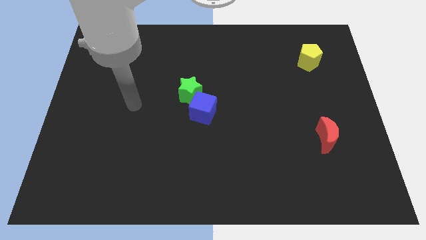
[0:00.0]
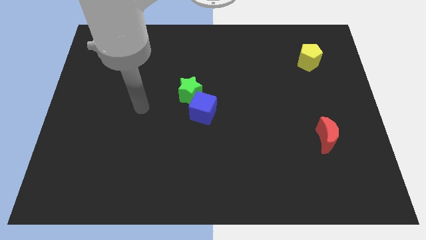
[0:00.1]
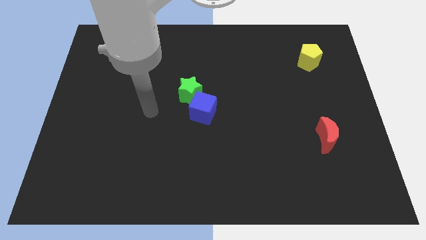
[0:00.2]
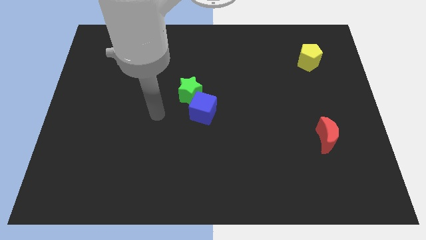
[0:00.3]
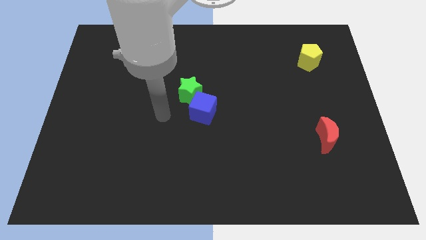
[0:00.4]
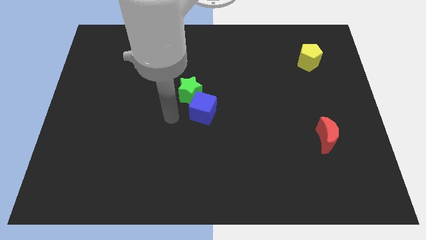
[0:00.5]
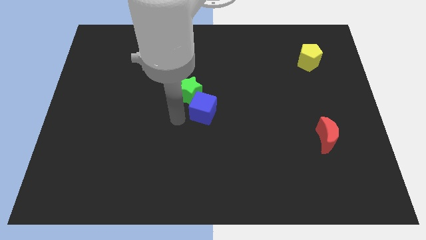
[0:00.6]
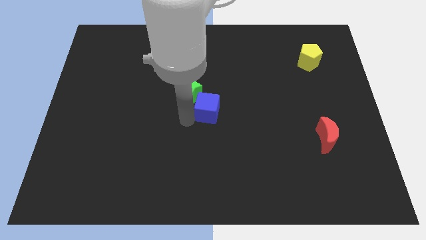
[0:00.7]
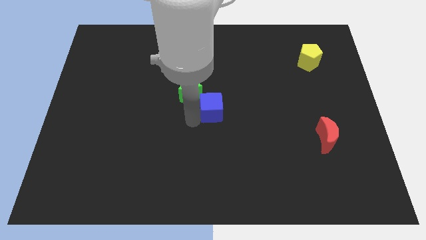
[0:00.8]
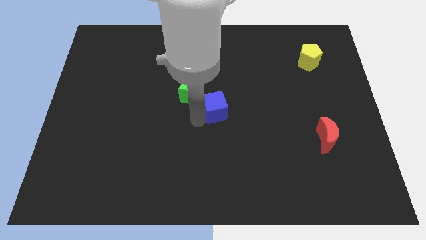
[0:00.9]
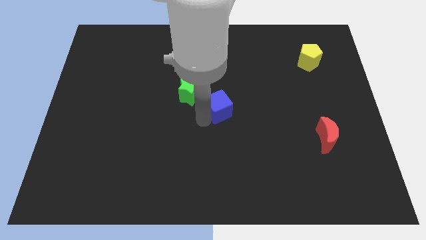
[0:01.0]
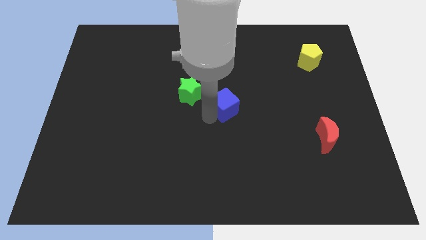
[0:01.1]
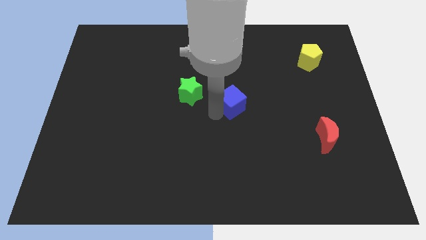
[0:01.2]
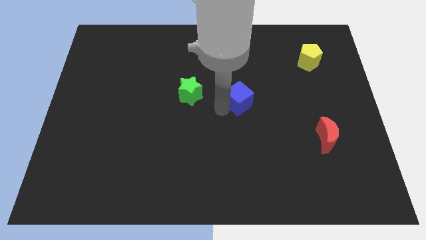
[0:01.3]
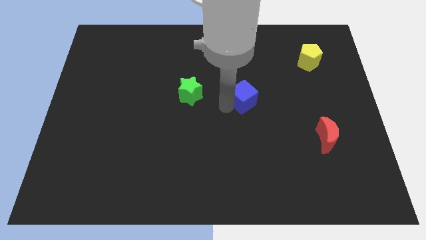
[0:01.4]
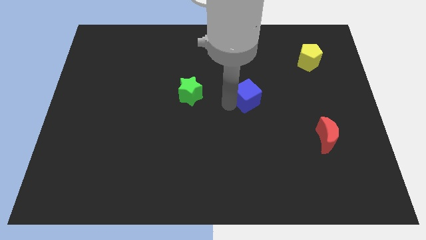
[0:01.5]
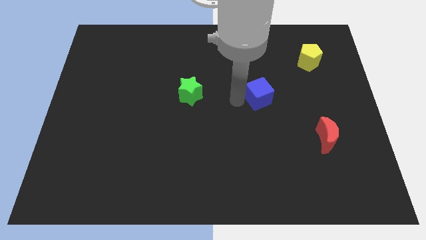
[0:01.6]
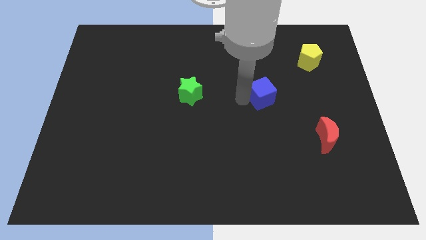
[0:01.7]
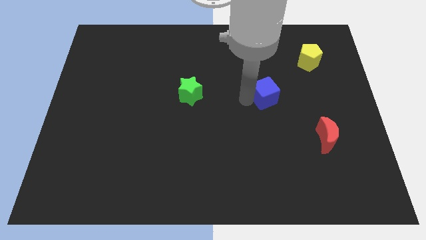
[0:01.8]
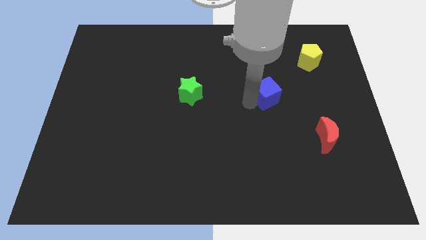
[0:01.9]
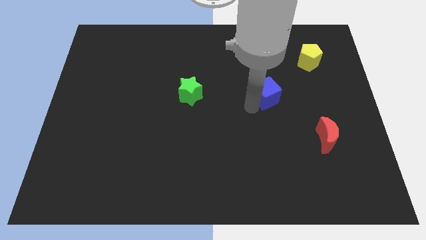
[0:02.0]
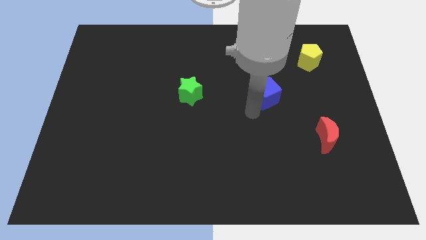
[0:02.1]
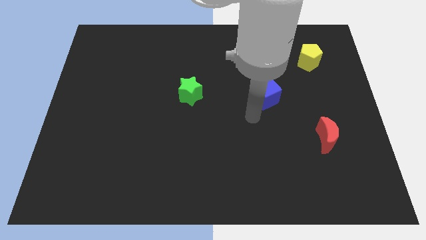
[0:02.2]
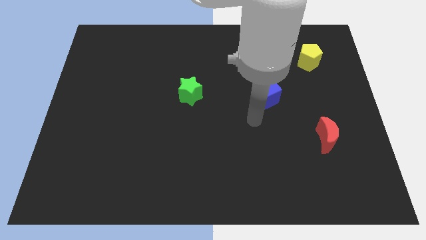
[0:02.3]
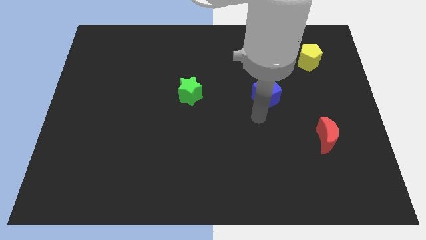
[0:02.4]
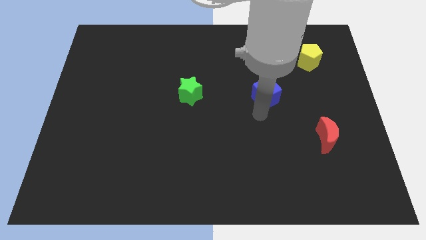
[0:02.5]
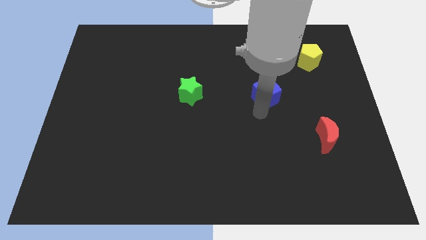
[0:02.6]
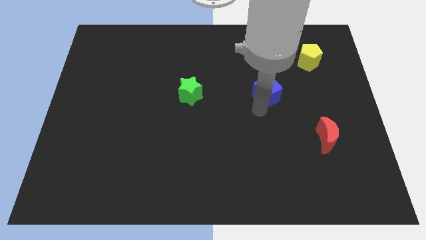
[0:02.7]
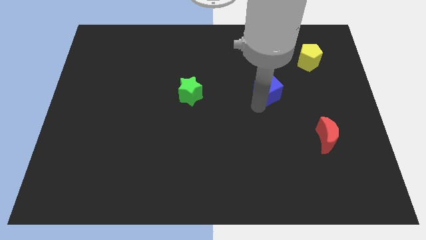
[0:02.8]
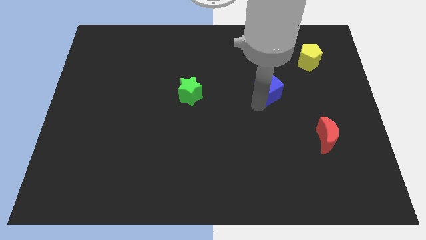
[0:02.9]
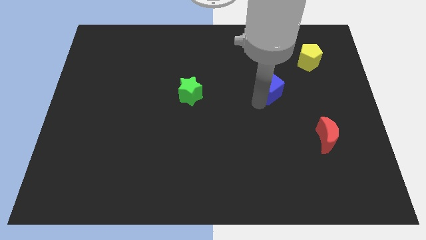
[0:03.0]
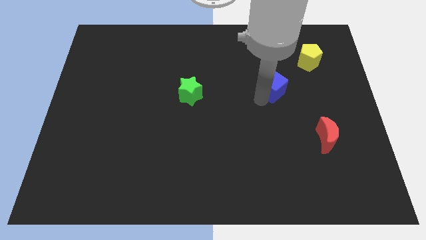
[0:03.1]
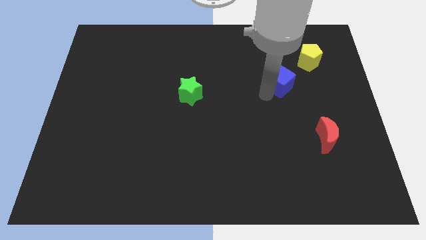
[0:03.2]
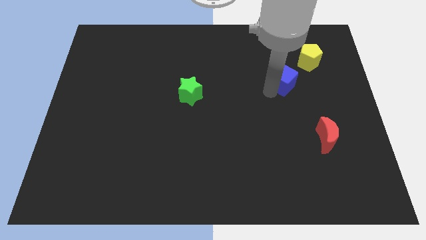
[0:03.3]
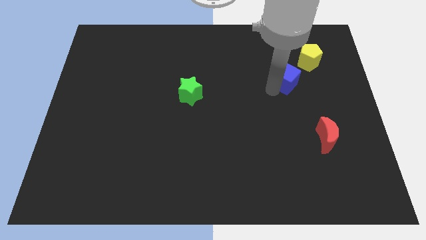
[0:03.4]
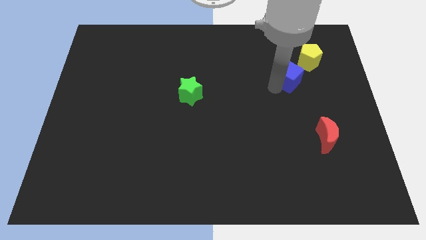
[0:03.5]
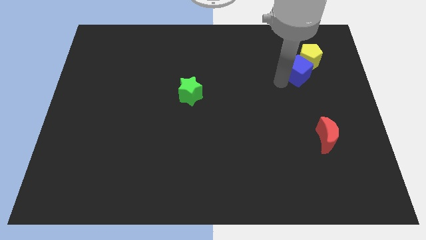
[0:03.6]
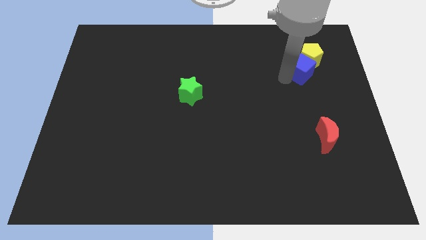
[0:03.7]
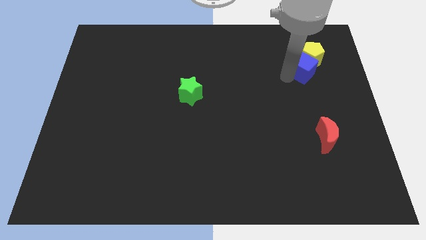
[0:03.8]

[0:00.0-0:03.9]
put the cube next to the yellow pentagon

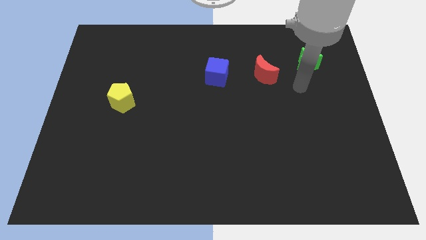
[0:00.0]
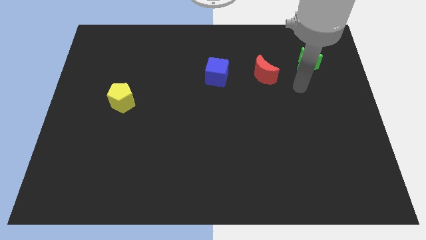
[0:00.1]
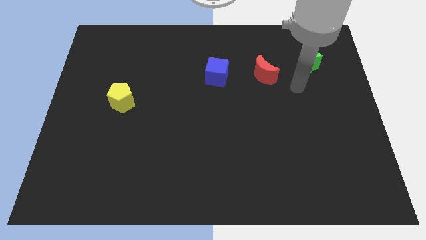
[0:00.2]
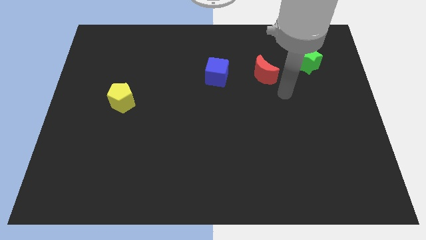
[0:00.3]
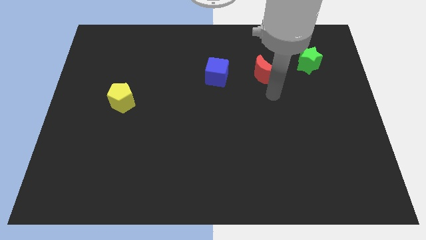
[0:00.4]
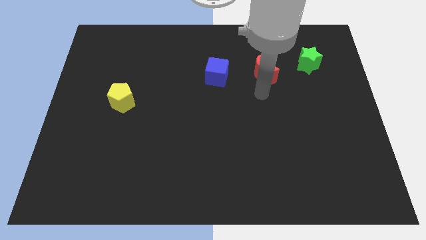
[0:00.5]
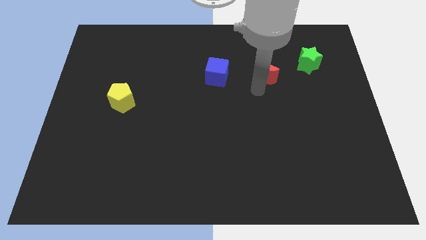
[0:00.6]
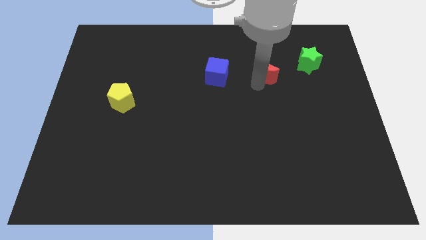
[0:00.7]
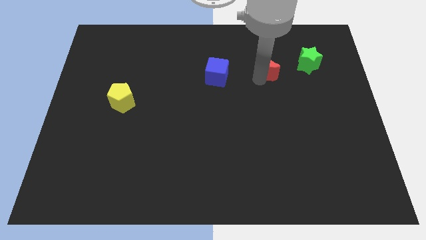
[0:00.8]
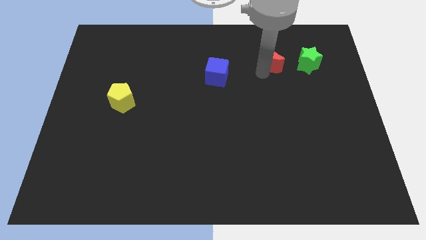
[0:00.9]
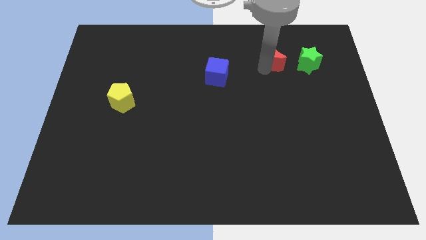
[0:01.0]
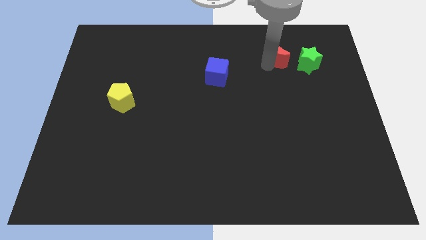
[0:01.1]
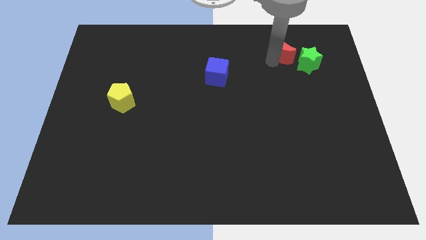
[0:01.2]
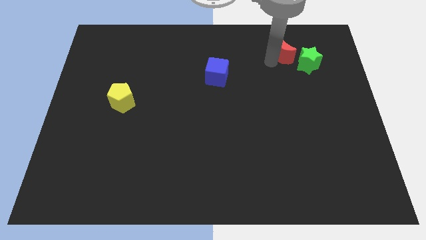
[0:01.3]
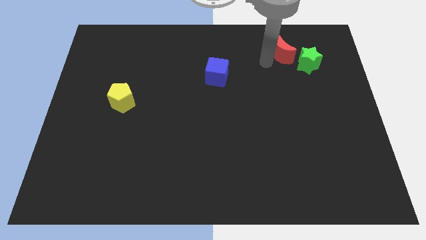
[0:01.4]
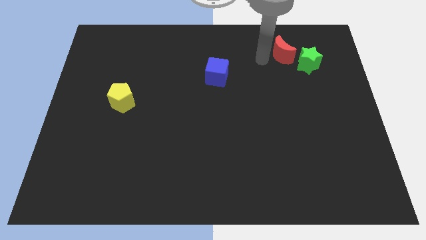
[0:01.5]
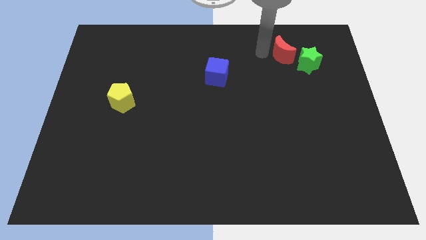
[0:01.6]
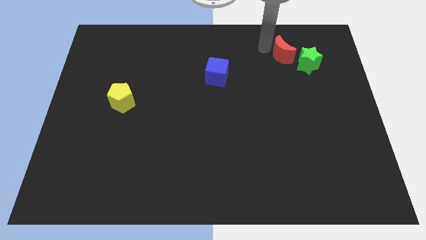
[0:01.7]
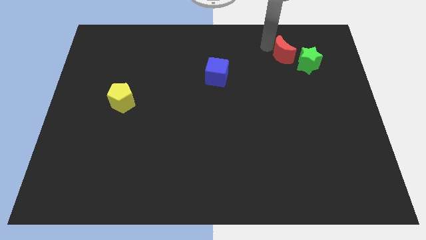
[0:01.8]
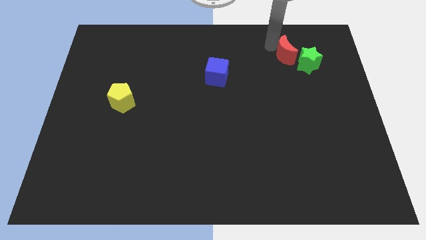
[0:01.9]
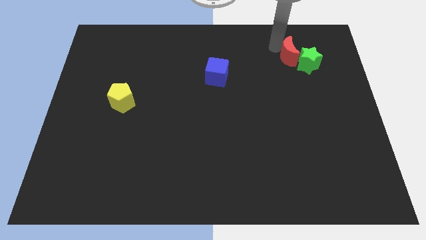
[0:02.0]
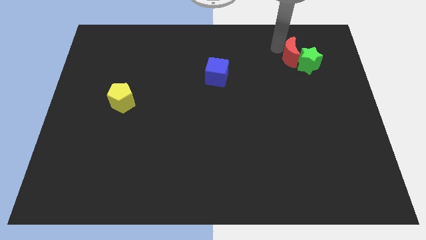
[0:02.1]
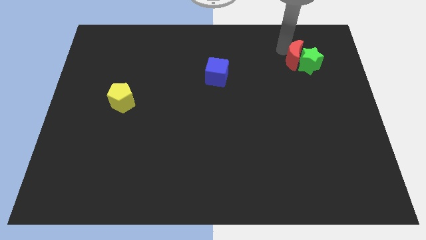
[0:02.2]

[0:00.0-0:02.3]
slide the red moon next to the green star

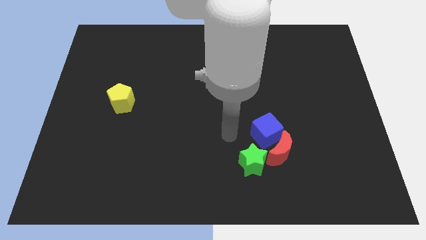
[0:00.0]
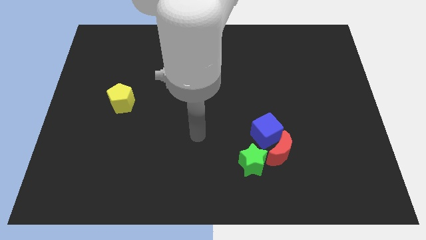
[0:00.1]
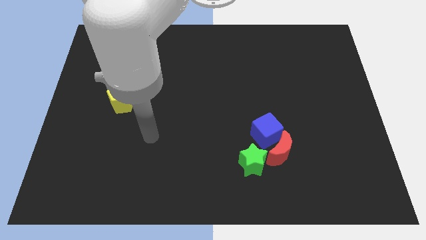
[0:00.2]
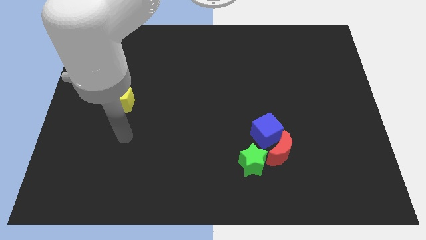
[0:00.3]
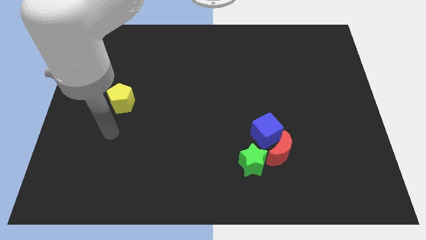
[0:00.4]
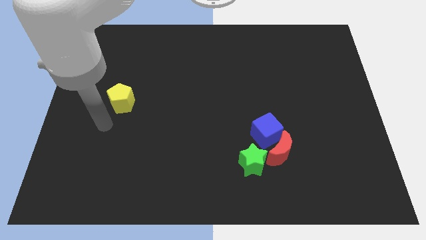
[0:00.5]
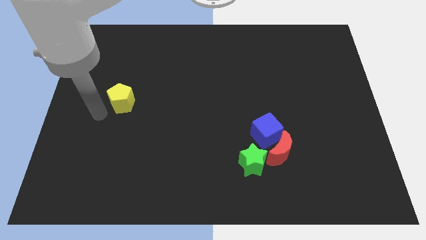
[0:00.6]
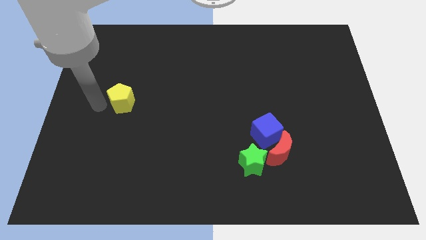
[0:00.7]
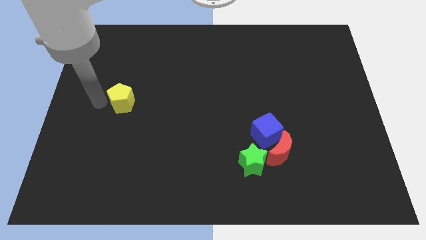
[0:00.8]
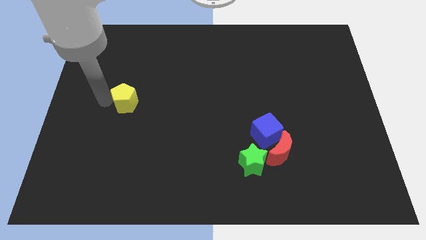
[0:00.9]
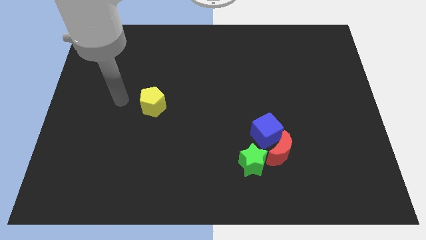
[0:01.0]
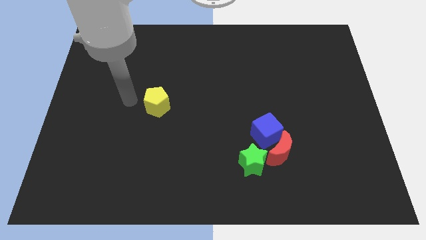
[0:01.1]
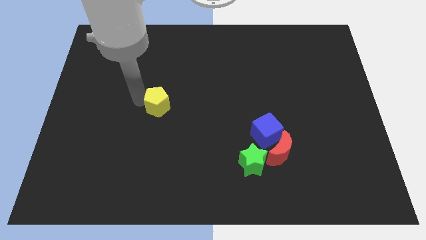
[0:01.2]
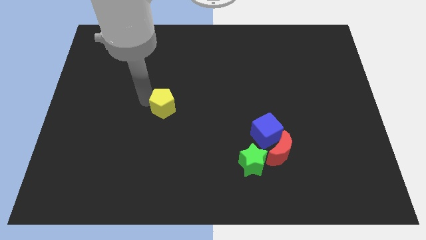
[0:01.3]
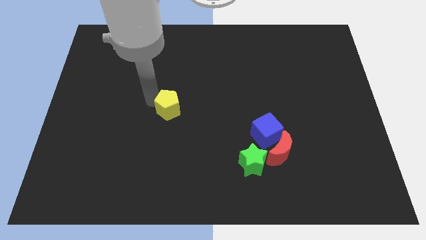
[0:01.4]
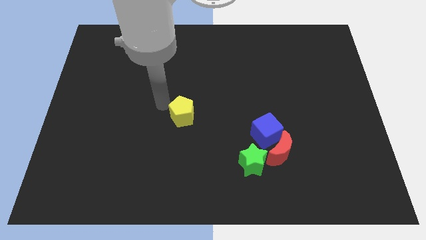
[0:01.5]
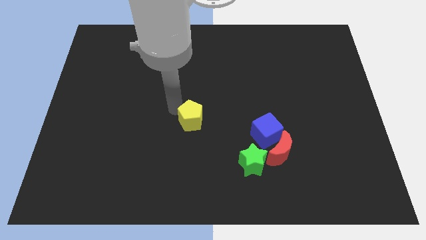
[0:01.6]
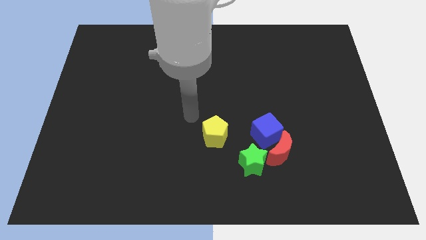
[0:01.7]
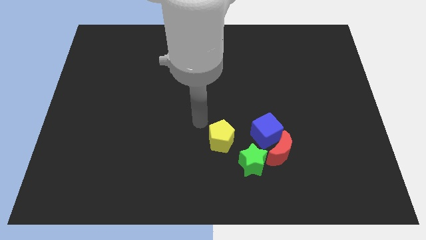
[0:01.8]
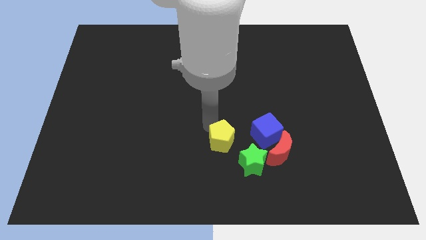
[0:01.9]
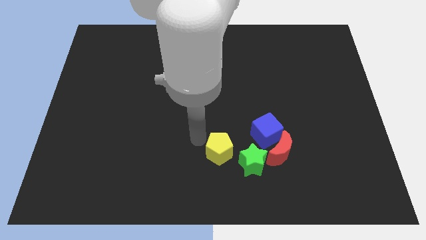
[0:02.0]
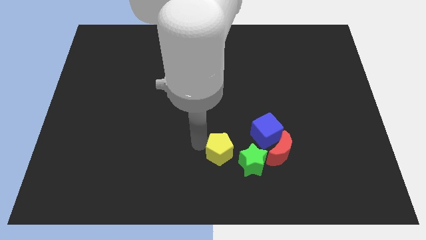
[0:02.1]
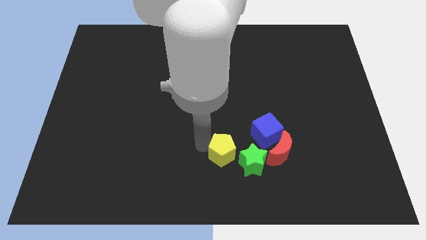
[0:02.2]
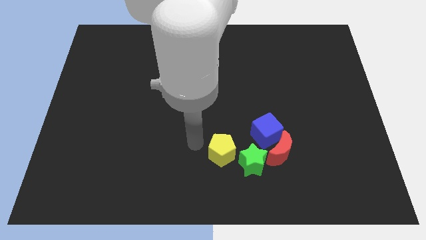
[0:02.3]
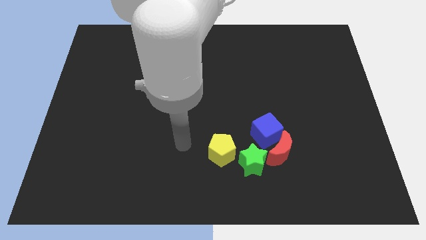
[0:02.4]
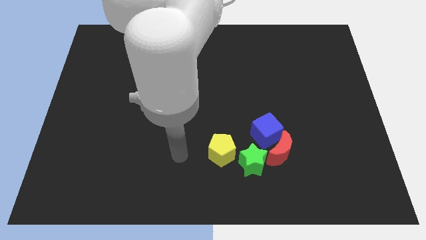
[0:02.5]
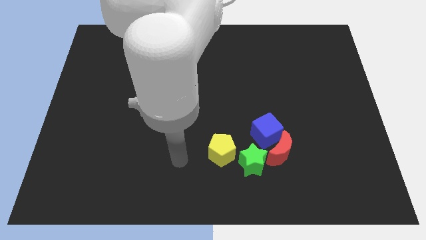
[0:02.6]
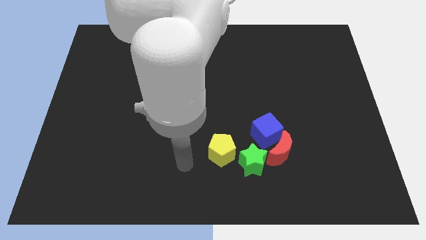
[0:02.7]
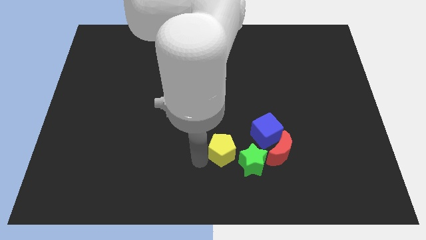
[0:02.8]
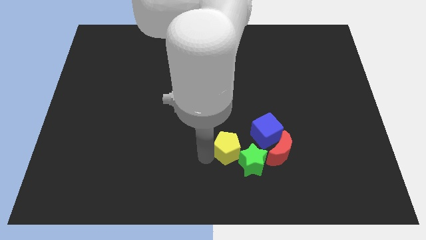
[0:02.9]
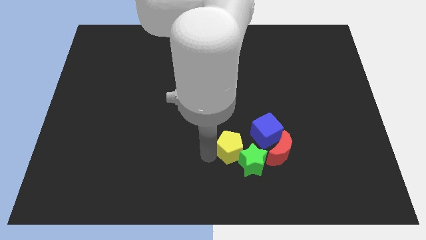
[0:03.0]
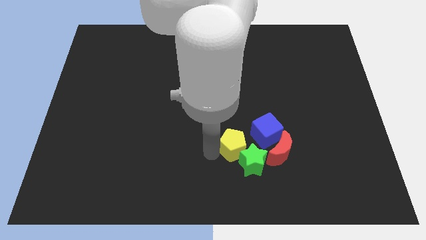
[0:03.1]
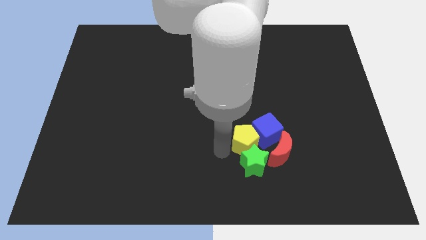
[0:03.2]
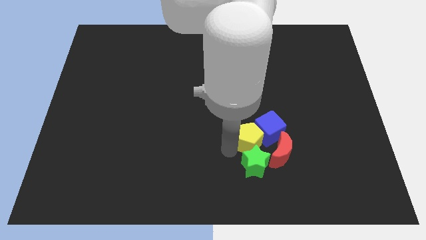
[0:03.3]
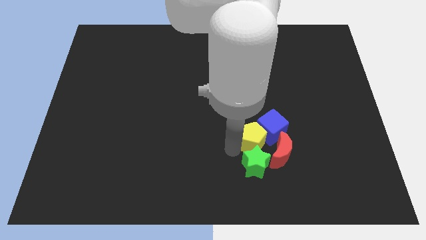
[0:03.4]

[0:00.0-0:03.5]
move the yellow block towards the blue cube
